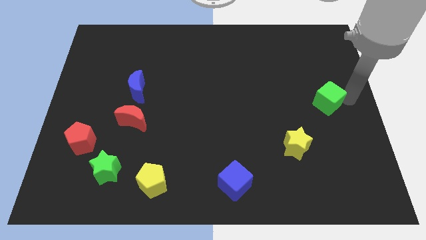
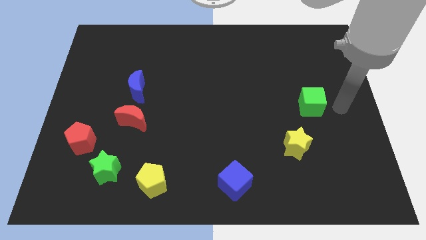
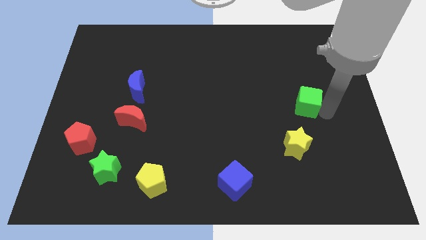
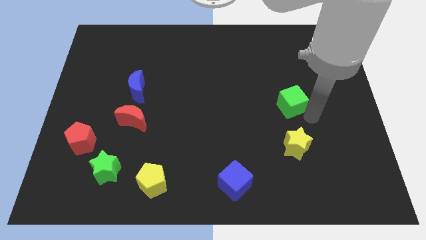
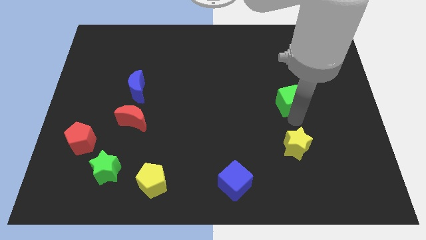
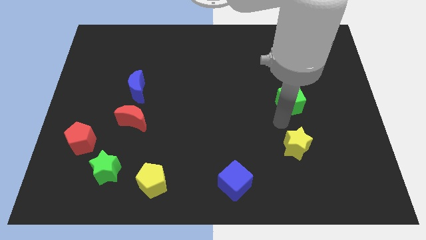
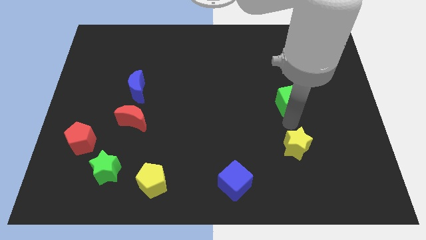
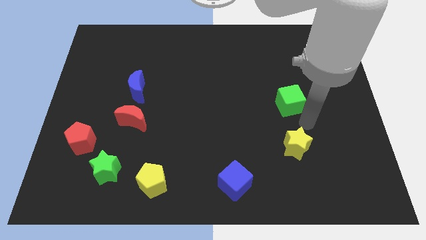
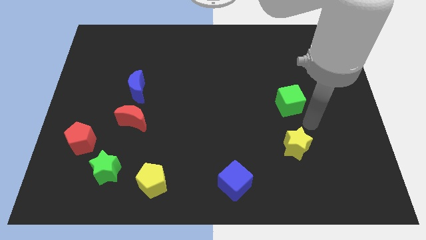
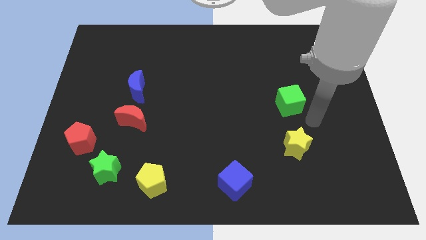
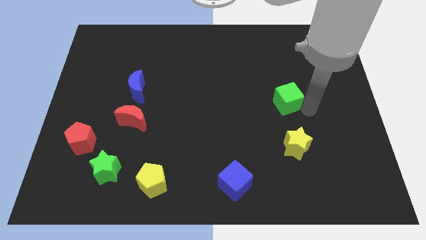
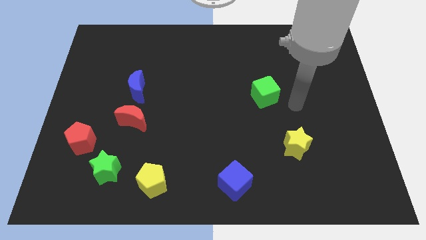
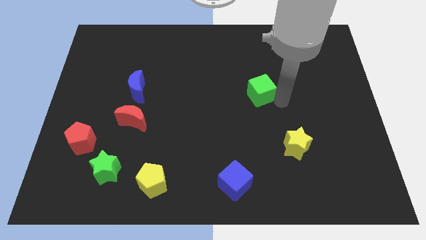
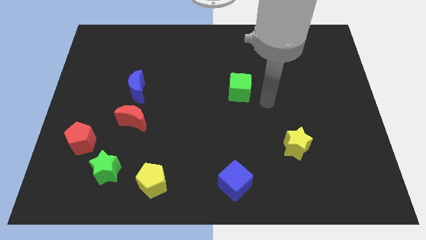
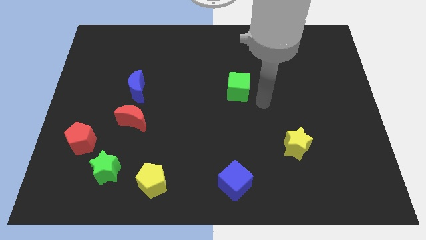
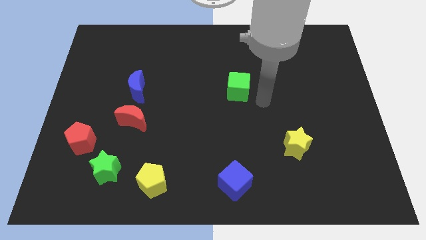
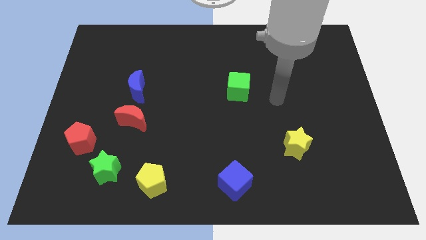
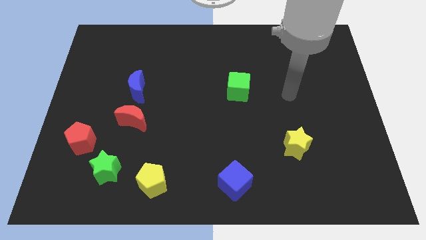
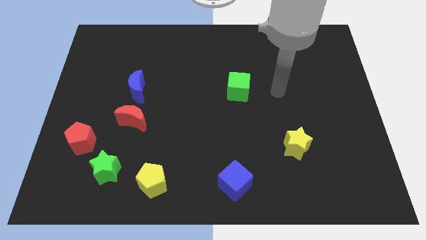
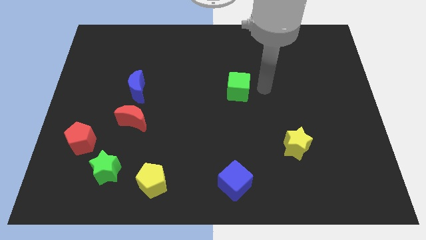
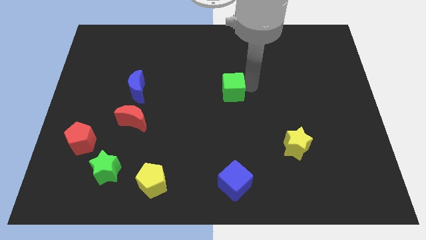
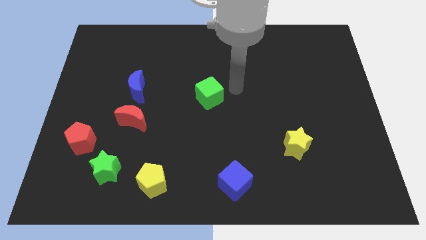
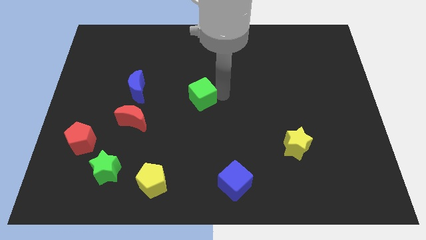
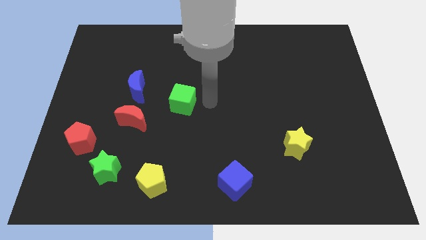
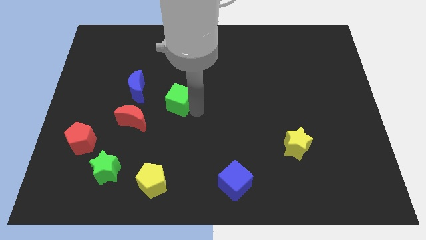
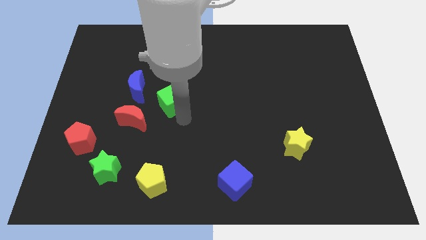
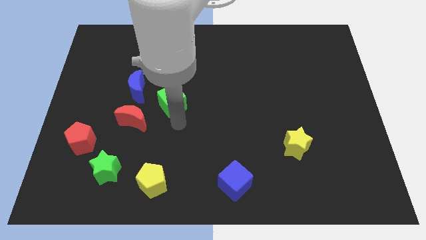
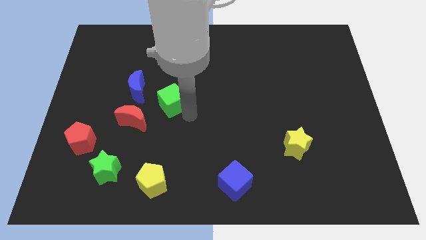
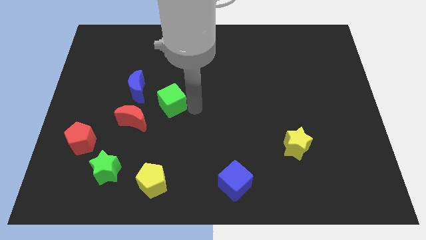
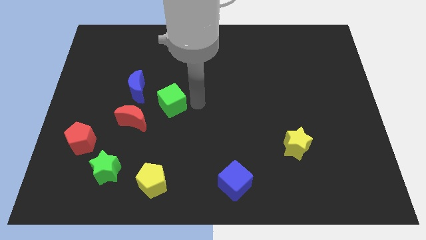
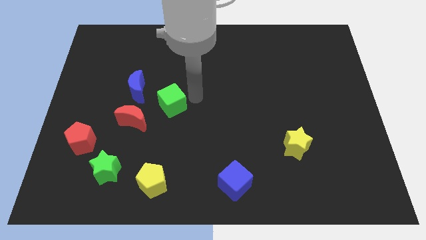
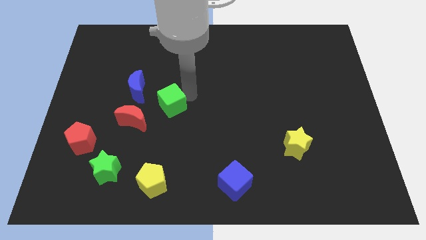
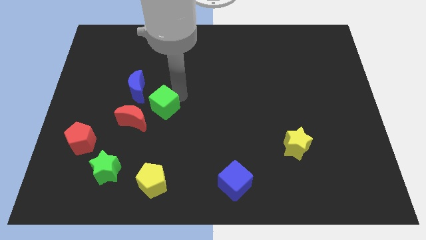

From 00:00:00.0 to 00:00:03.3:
push green cube to the bottom right of blue moon

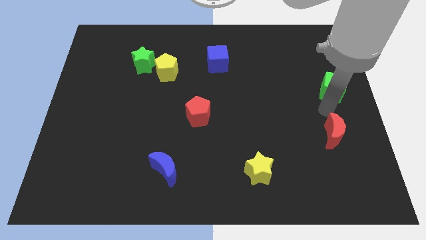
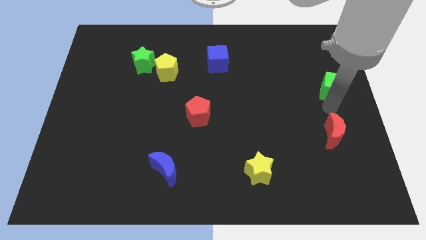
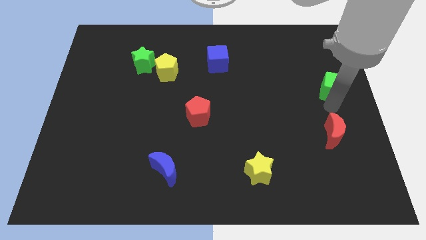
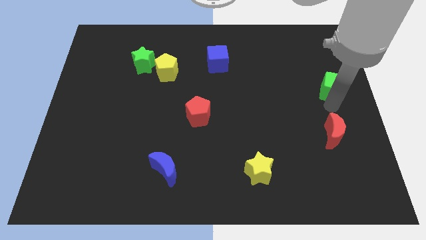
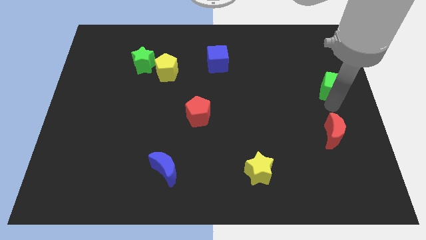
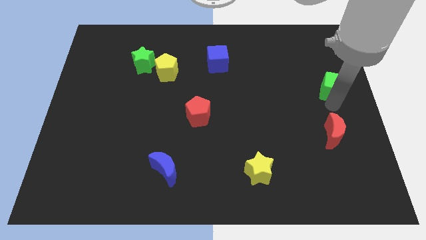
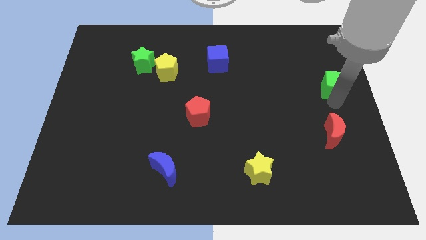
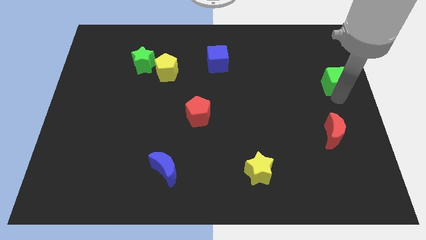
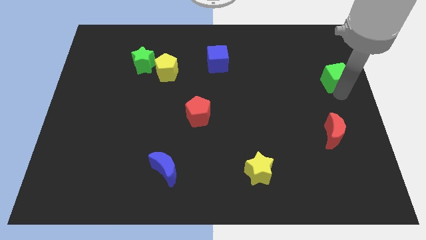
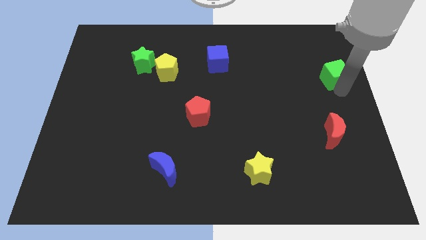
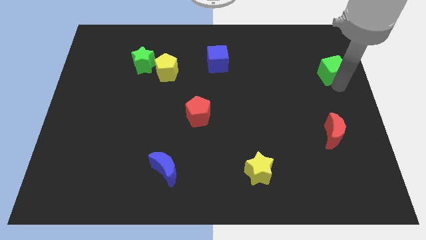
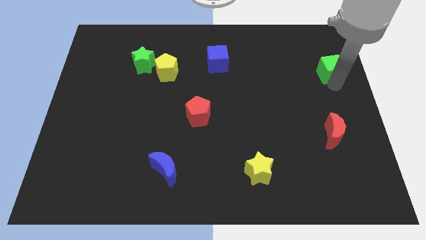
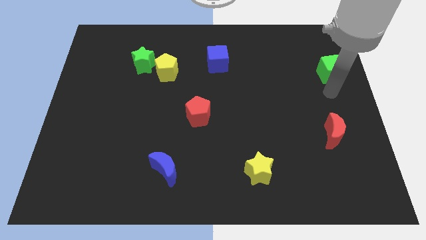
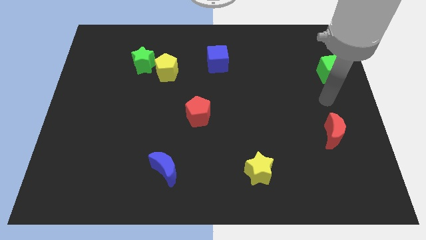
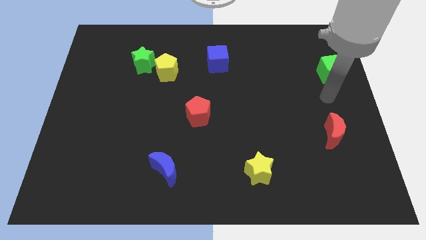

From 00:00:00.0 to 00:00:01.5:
slightly move the green cube towards the right top

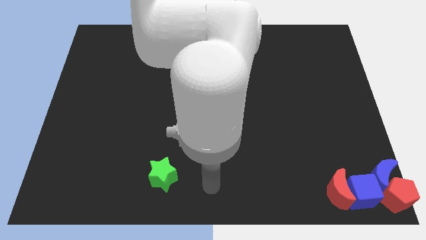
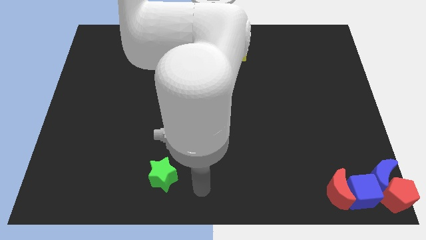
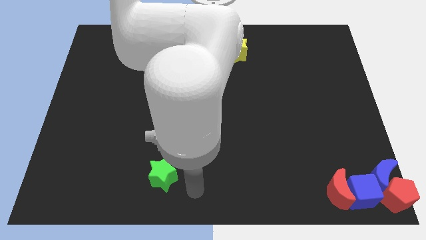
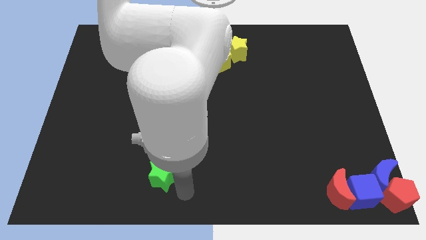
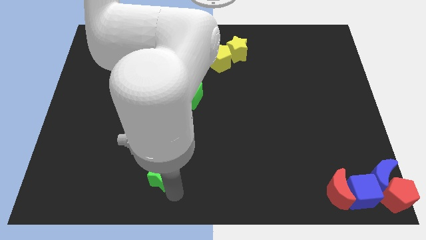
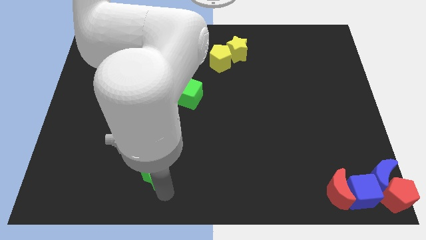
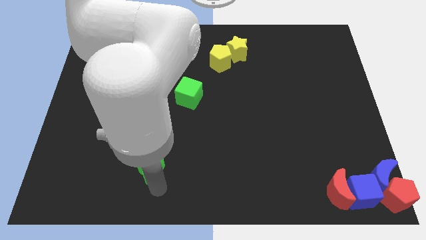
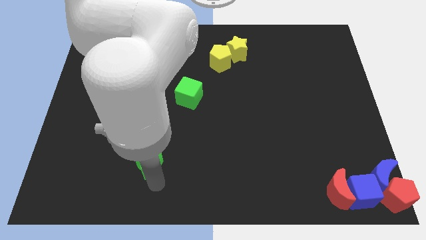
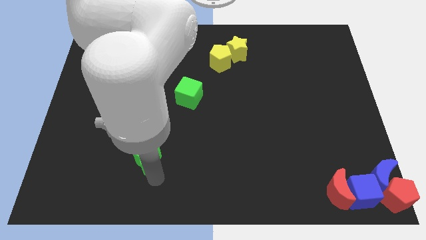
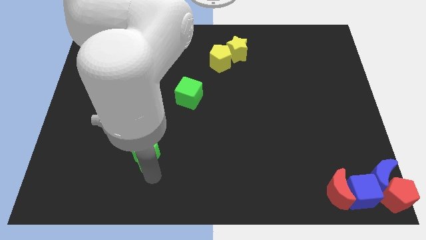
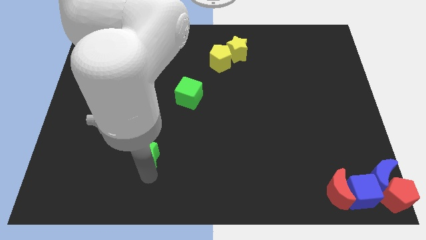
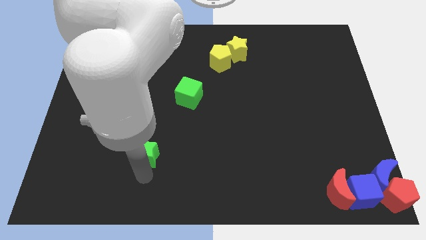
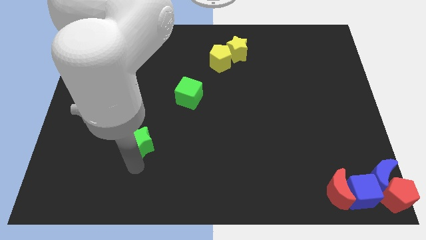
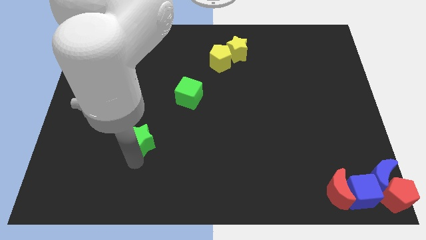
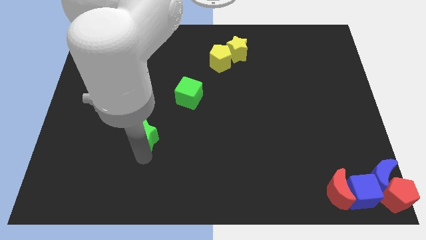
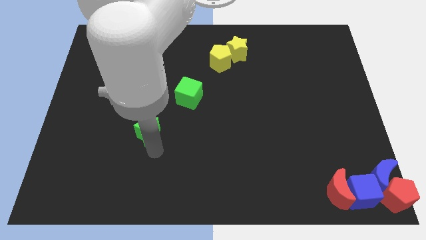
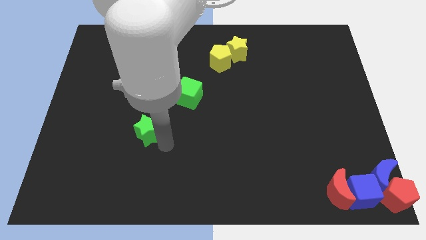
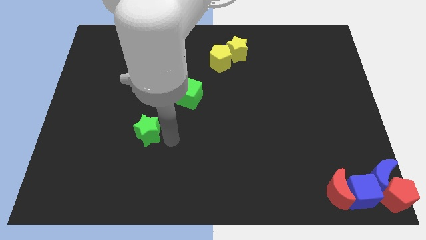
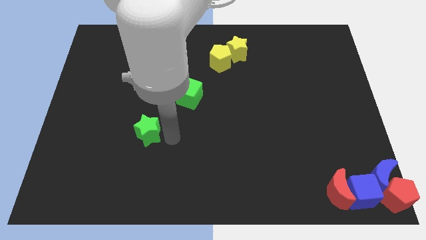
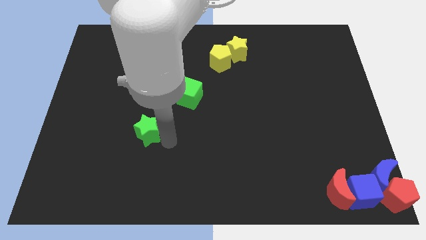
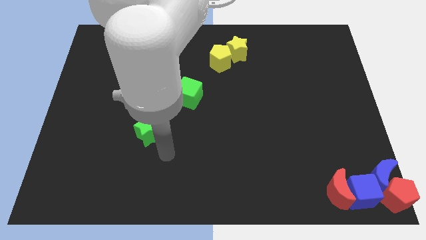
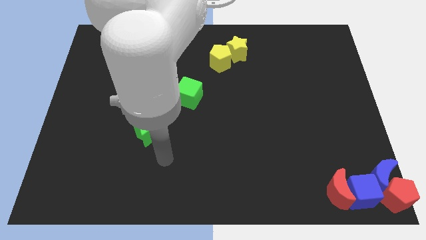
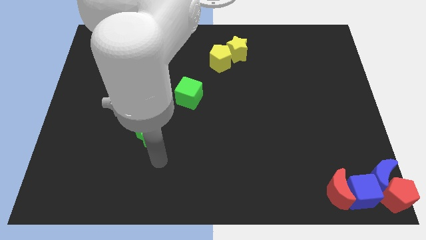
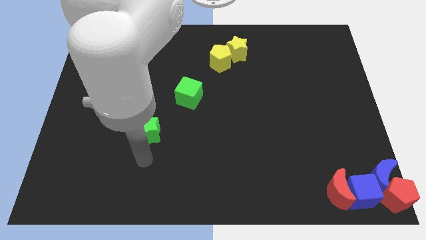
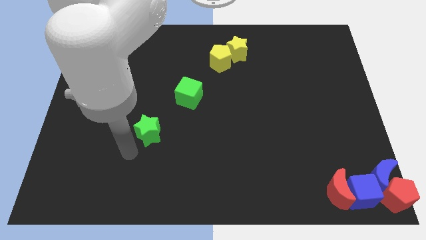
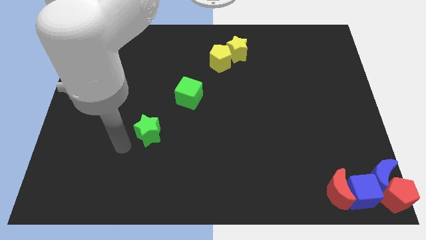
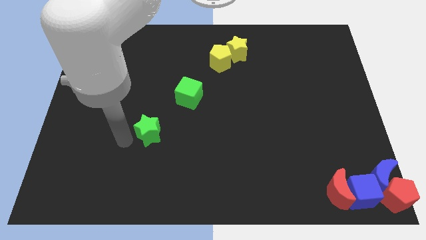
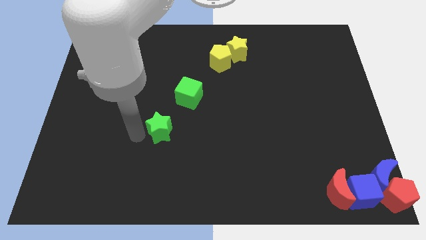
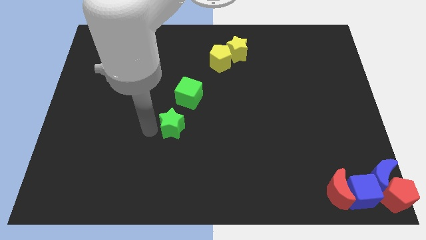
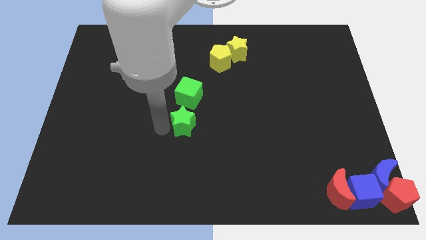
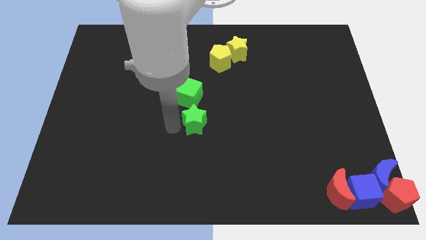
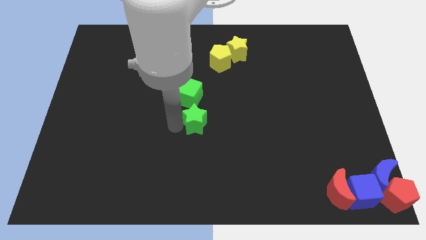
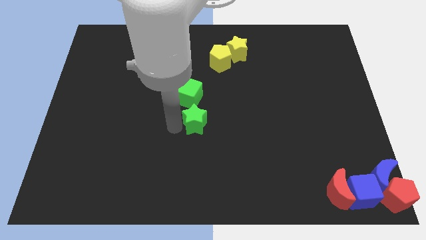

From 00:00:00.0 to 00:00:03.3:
push the green star closer to the green cube

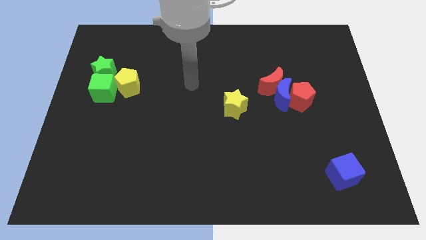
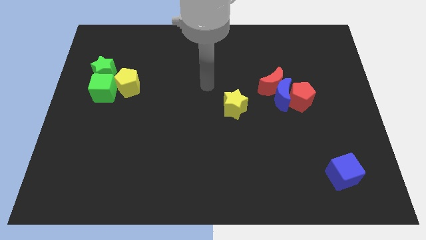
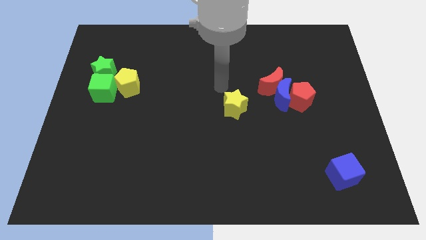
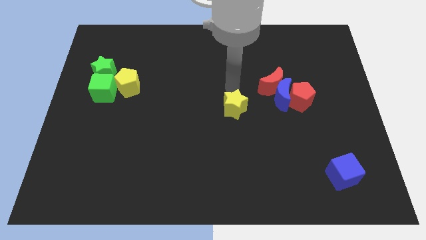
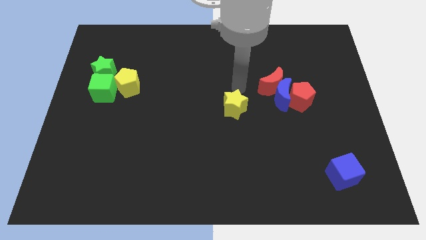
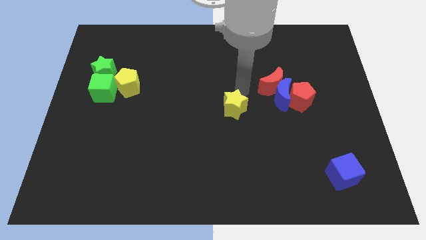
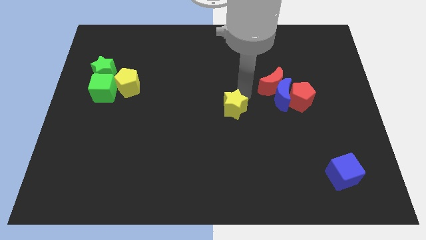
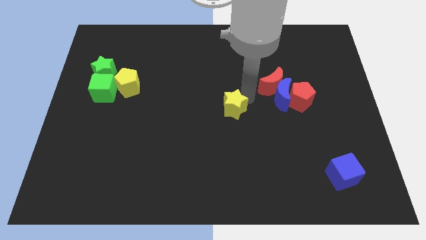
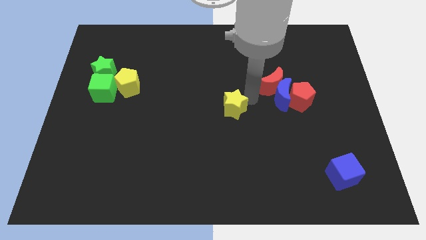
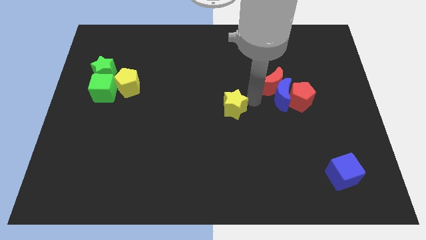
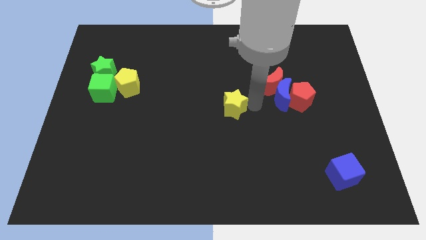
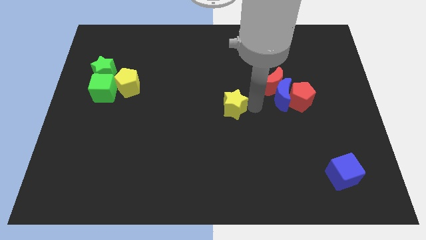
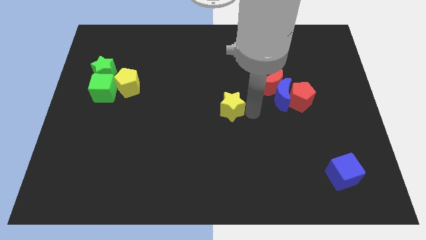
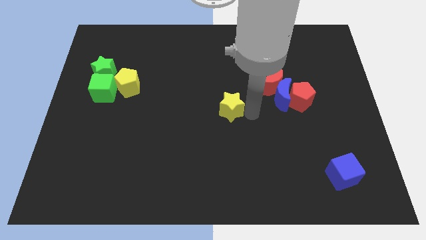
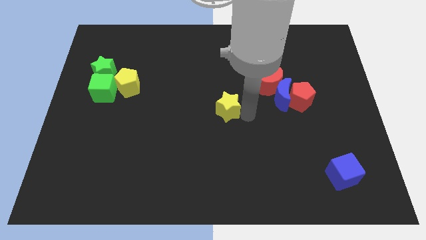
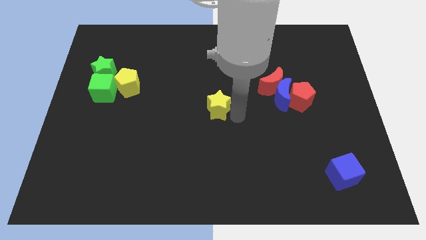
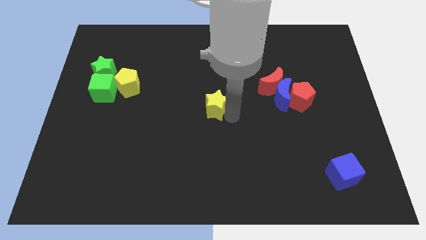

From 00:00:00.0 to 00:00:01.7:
place the yellow star at the center of the board
